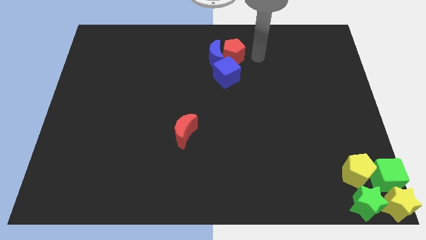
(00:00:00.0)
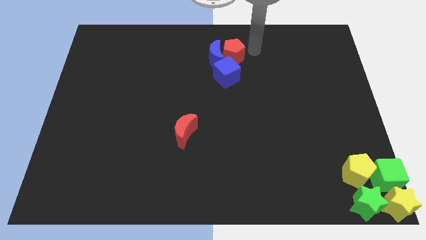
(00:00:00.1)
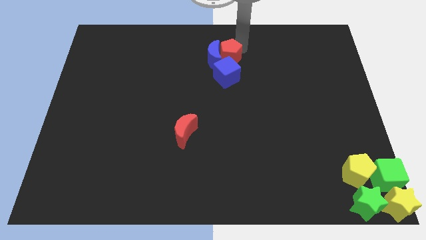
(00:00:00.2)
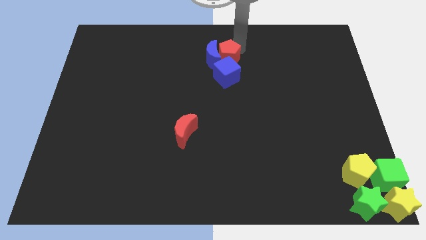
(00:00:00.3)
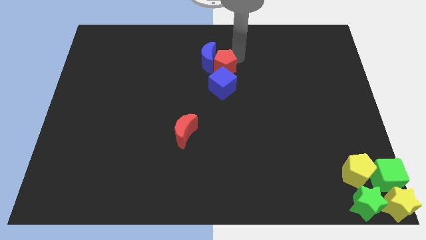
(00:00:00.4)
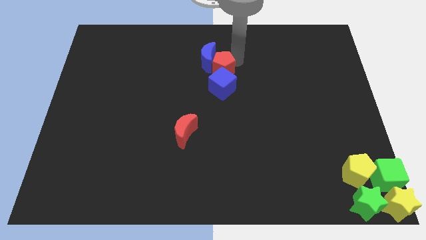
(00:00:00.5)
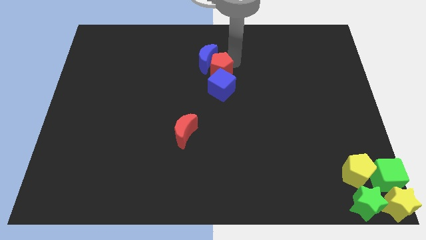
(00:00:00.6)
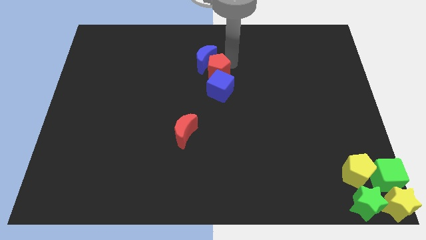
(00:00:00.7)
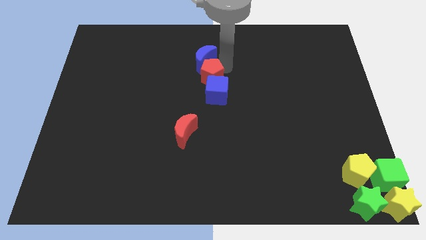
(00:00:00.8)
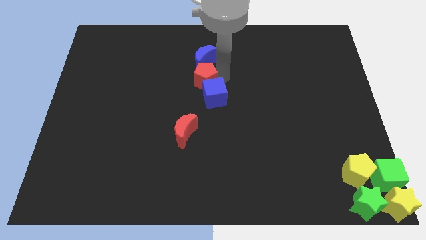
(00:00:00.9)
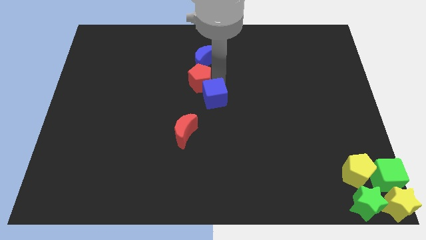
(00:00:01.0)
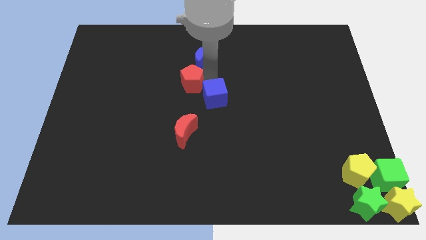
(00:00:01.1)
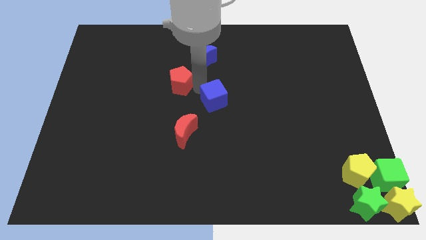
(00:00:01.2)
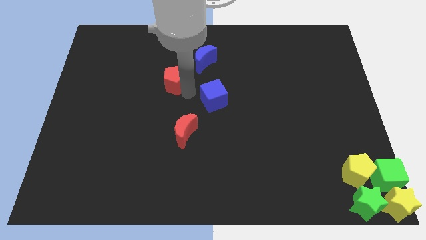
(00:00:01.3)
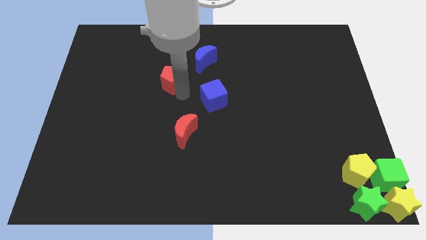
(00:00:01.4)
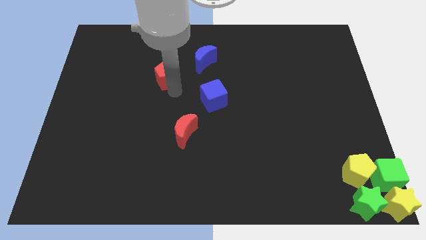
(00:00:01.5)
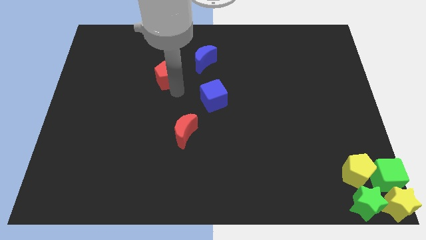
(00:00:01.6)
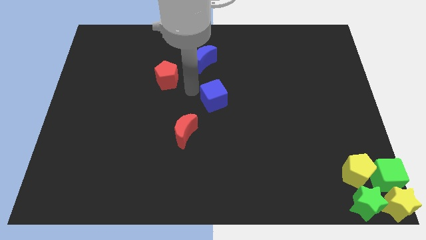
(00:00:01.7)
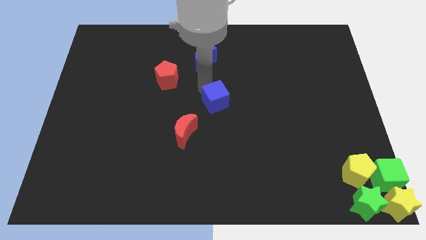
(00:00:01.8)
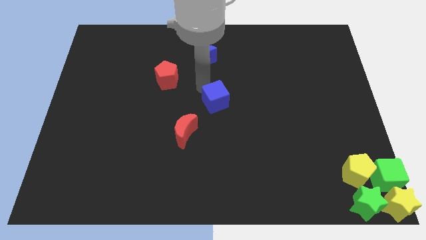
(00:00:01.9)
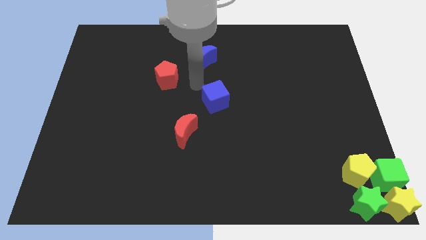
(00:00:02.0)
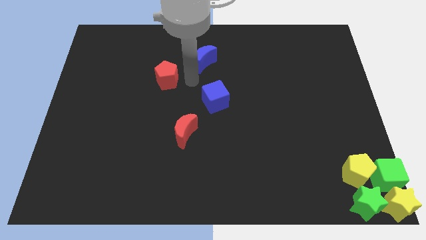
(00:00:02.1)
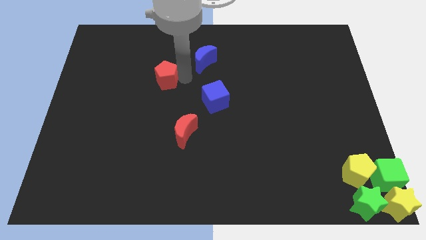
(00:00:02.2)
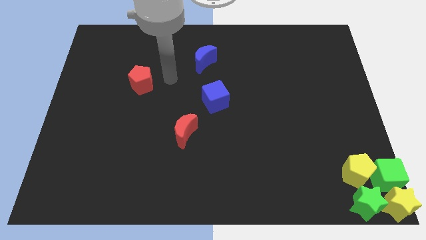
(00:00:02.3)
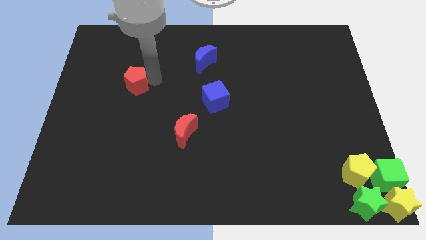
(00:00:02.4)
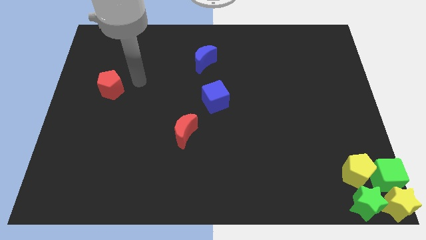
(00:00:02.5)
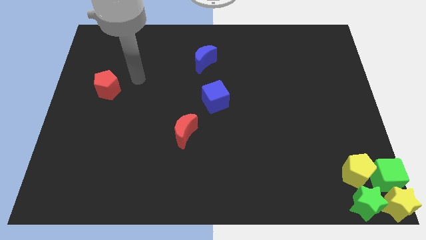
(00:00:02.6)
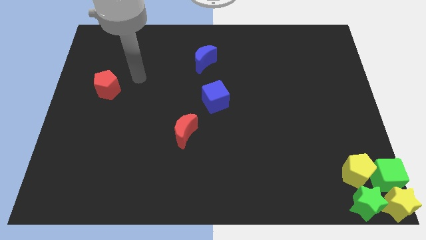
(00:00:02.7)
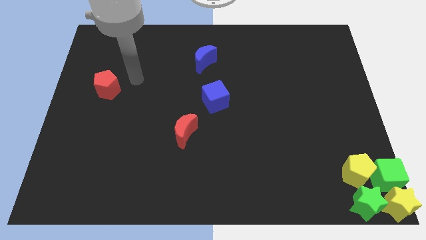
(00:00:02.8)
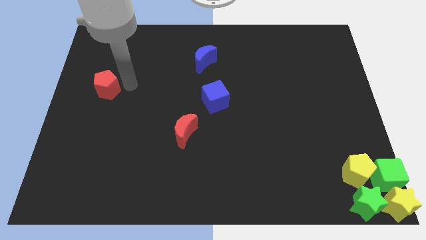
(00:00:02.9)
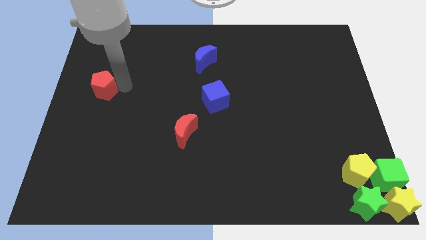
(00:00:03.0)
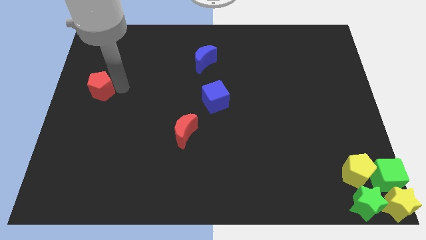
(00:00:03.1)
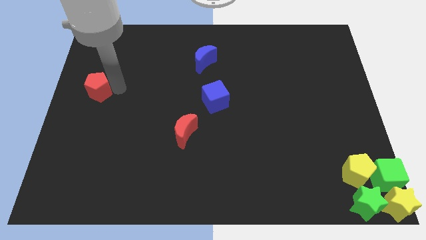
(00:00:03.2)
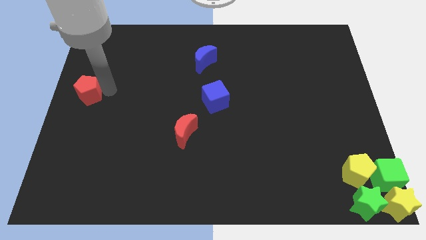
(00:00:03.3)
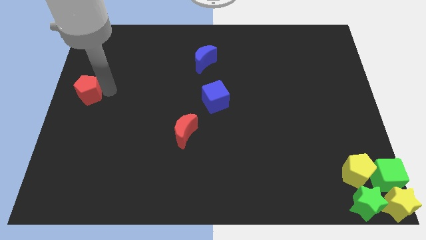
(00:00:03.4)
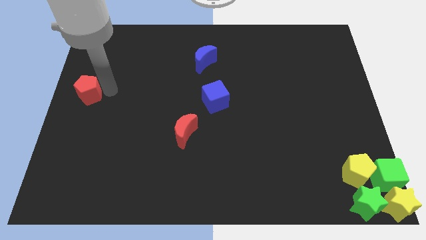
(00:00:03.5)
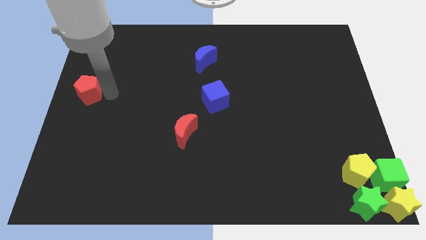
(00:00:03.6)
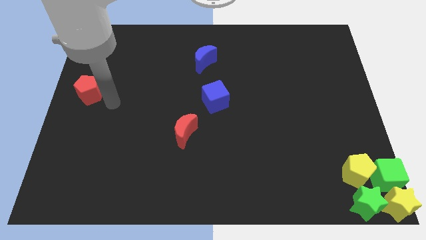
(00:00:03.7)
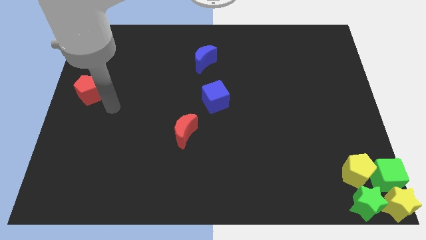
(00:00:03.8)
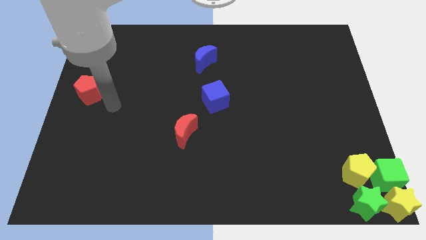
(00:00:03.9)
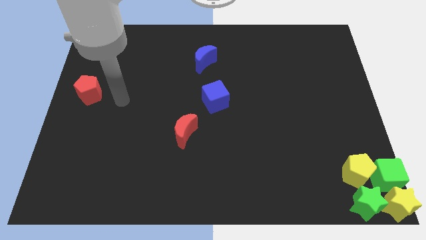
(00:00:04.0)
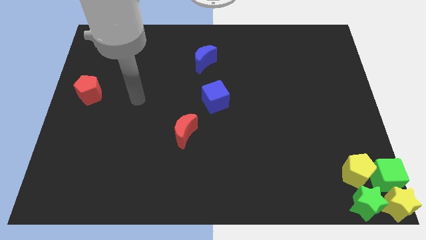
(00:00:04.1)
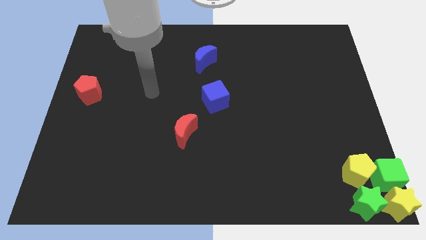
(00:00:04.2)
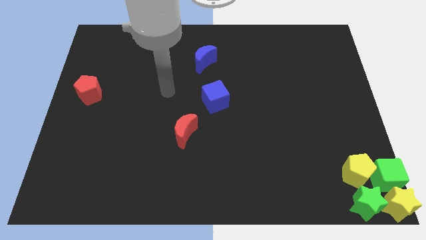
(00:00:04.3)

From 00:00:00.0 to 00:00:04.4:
separate the red pentagon from blue cube

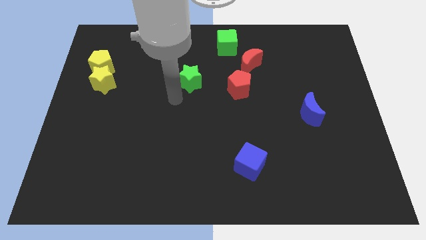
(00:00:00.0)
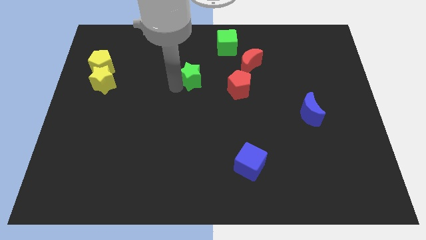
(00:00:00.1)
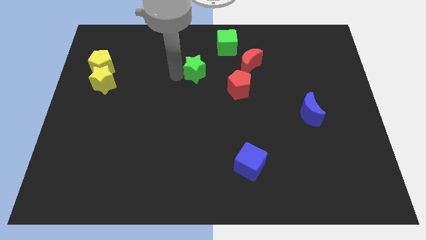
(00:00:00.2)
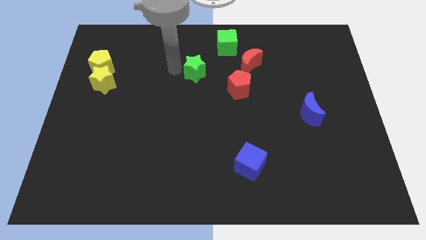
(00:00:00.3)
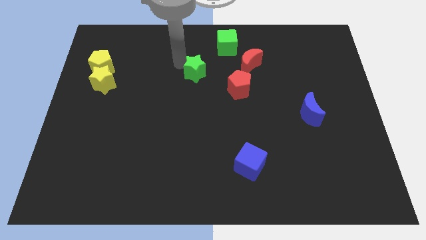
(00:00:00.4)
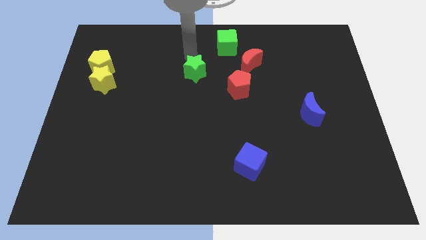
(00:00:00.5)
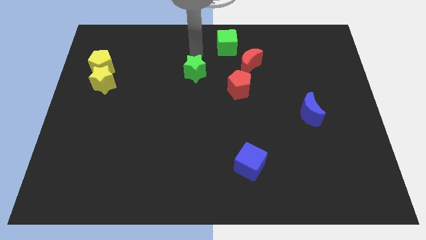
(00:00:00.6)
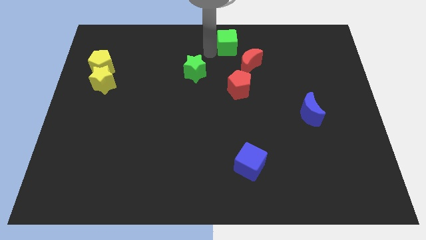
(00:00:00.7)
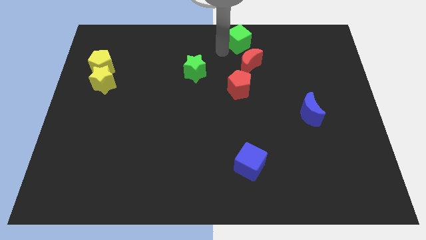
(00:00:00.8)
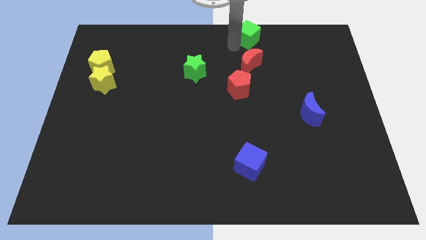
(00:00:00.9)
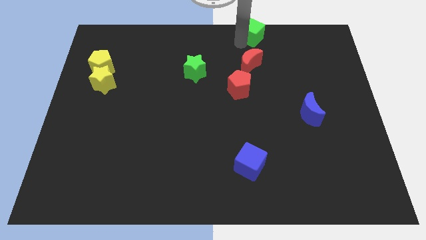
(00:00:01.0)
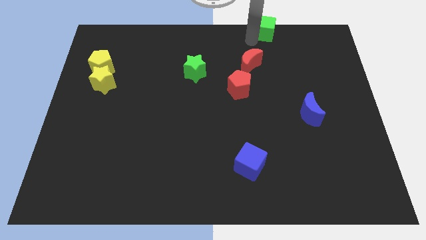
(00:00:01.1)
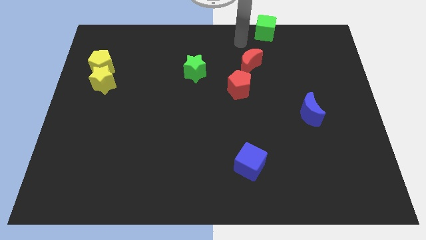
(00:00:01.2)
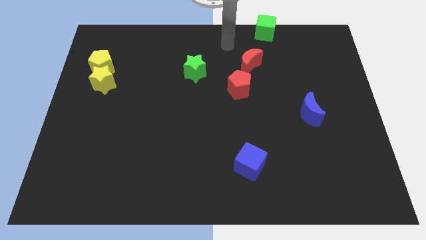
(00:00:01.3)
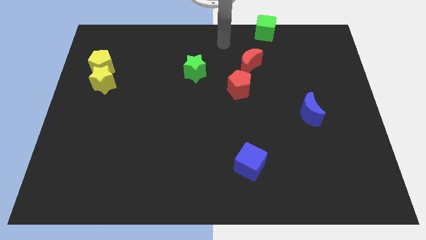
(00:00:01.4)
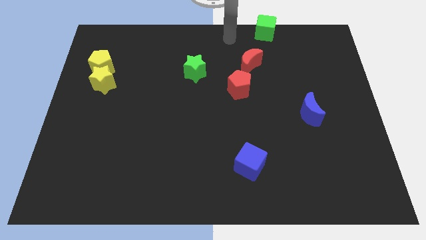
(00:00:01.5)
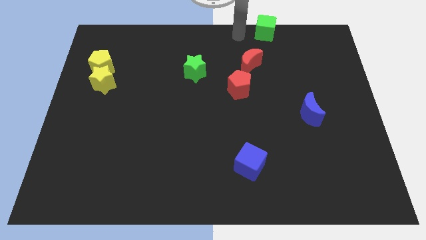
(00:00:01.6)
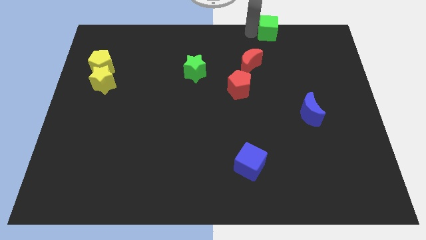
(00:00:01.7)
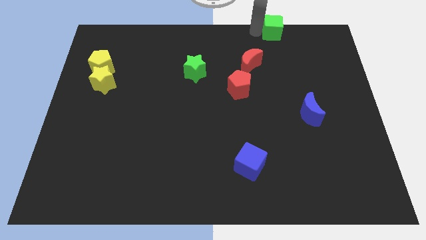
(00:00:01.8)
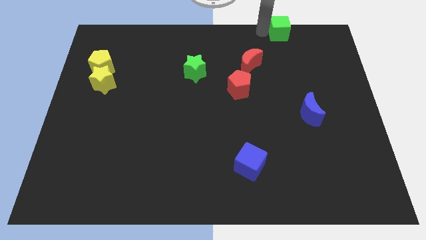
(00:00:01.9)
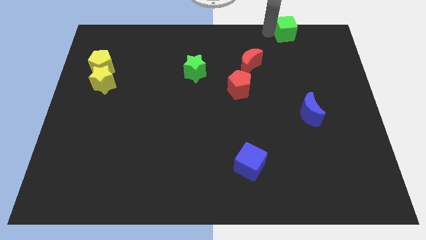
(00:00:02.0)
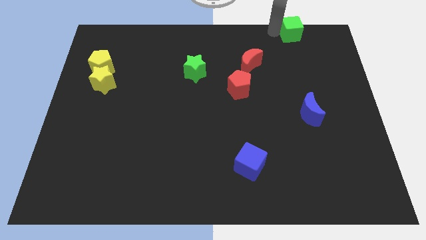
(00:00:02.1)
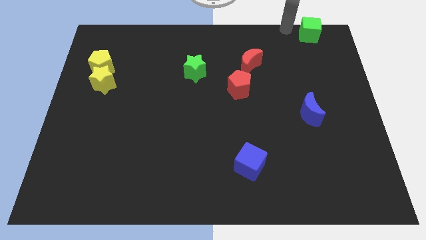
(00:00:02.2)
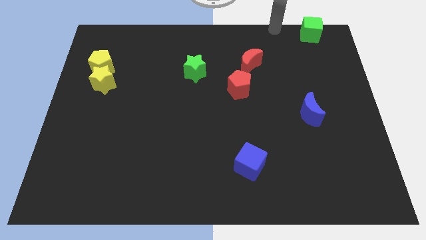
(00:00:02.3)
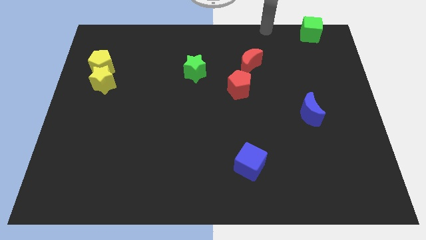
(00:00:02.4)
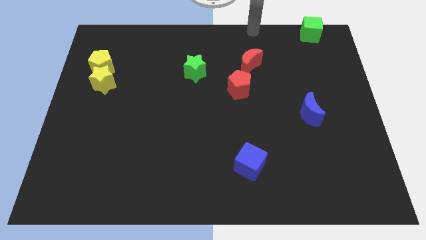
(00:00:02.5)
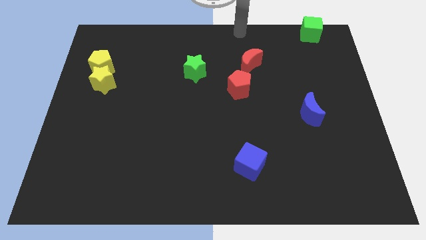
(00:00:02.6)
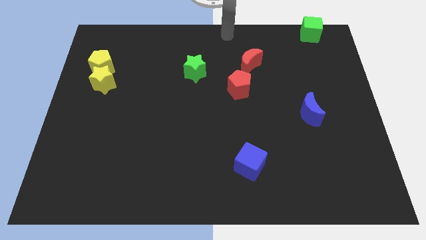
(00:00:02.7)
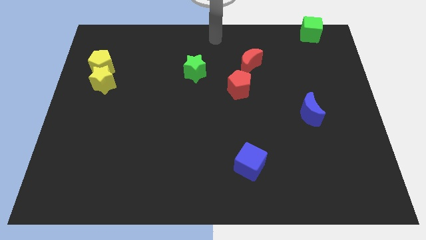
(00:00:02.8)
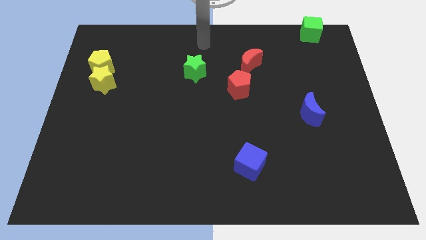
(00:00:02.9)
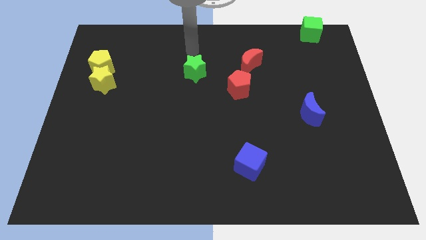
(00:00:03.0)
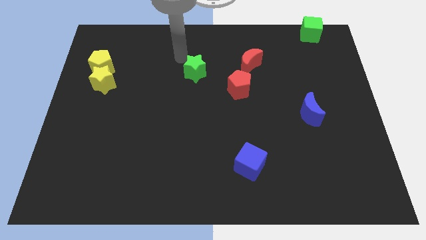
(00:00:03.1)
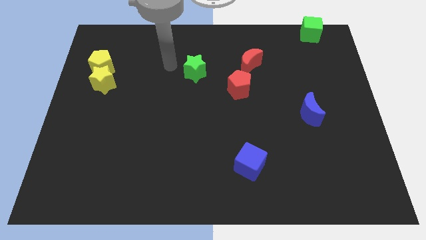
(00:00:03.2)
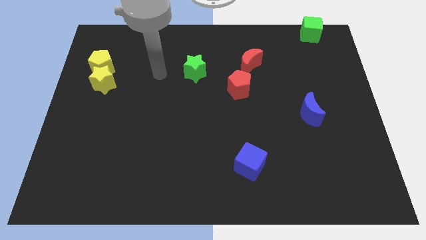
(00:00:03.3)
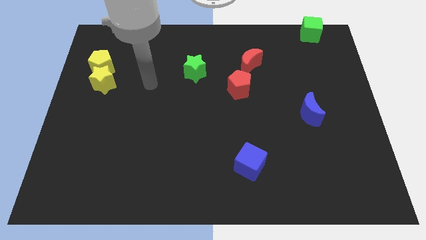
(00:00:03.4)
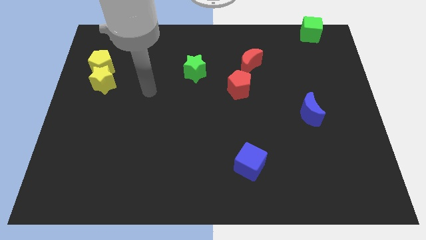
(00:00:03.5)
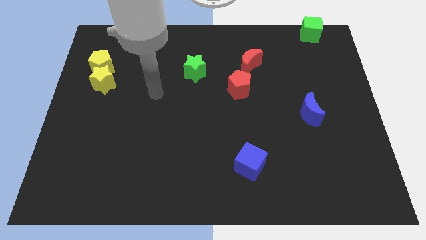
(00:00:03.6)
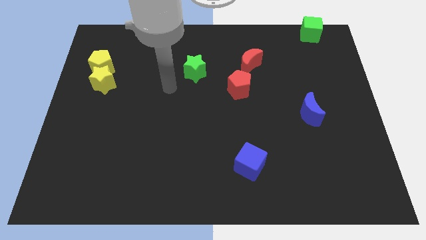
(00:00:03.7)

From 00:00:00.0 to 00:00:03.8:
move the green cube to the top right of the board

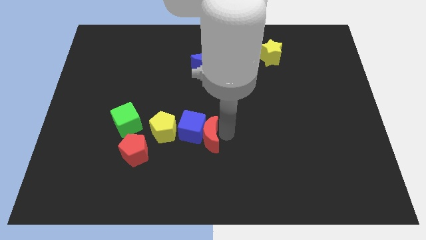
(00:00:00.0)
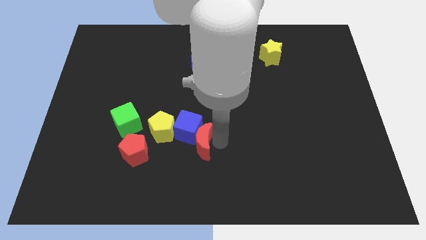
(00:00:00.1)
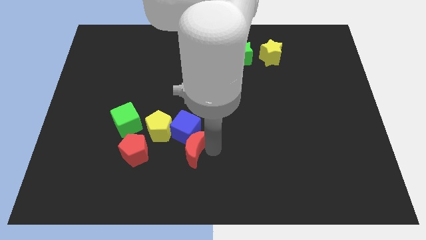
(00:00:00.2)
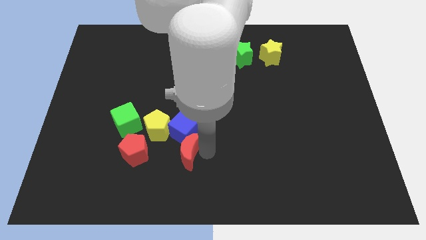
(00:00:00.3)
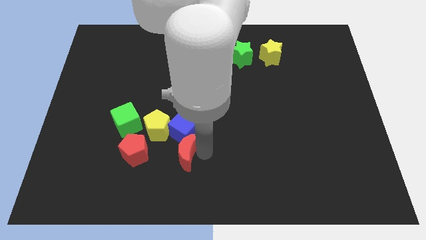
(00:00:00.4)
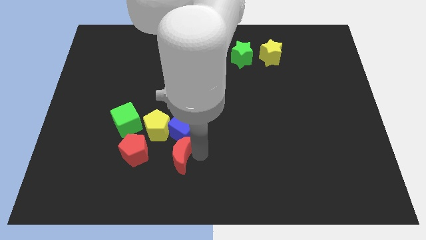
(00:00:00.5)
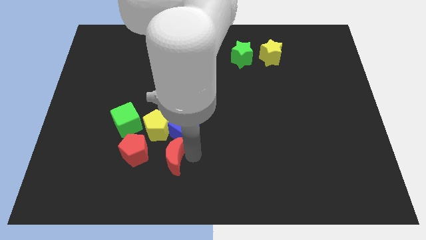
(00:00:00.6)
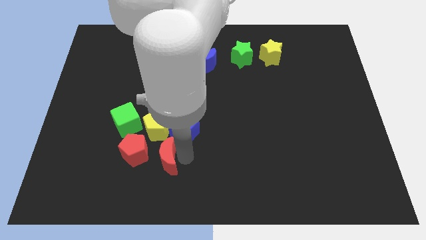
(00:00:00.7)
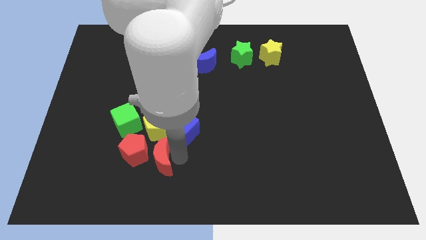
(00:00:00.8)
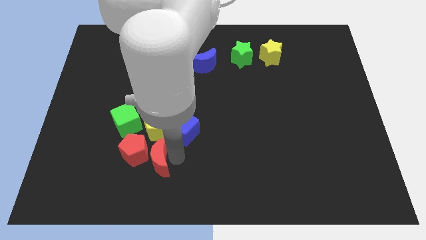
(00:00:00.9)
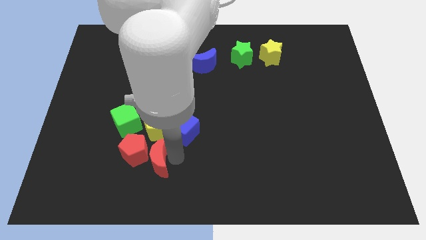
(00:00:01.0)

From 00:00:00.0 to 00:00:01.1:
separate red moon from blue cube
